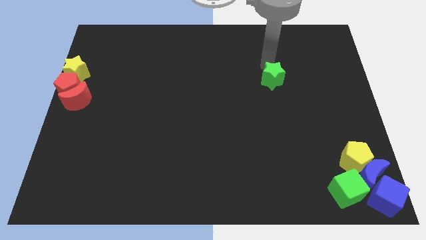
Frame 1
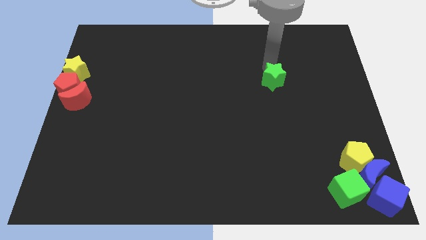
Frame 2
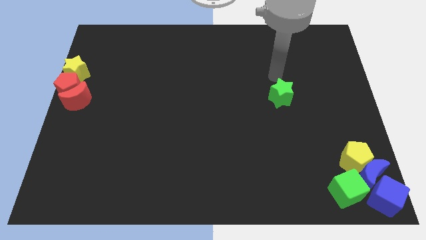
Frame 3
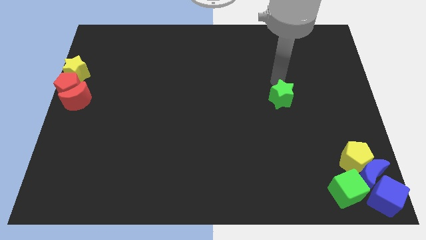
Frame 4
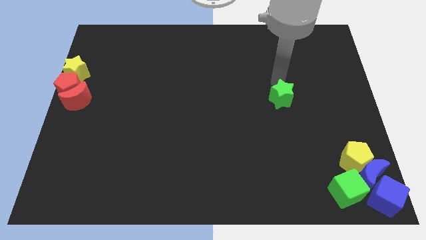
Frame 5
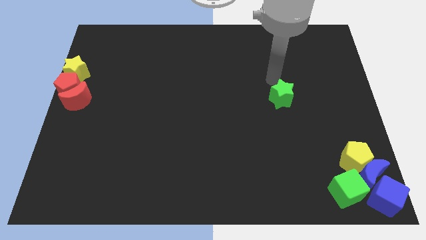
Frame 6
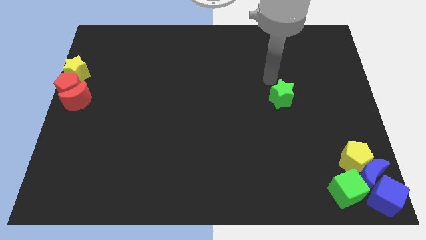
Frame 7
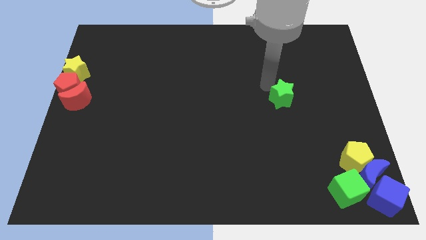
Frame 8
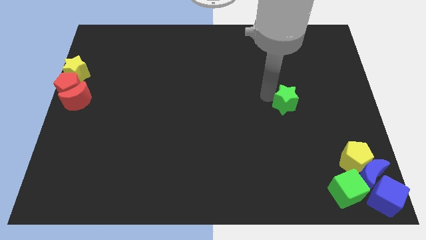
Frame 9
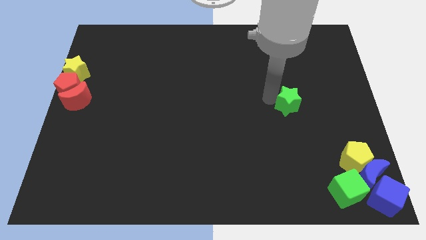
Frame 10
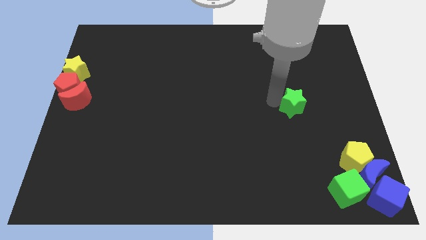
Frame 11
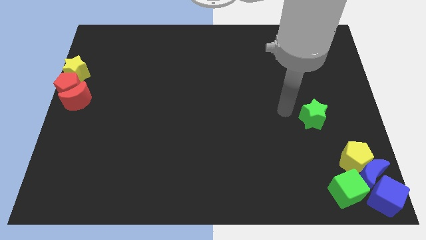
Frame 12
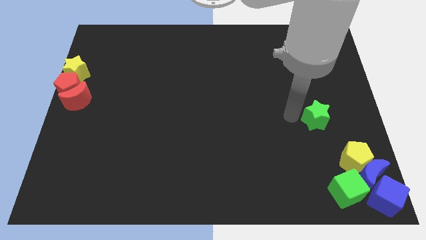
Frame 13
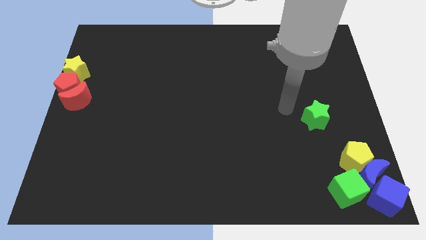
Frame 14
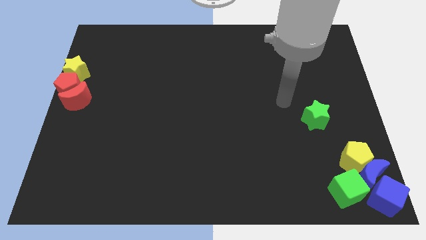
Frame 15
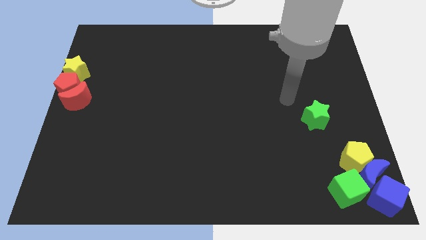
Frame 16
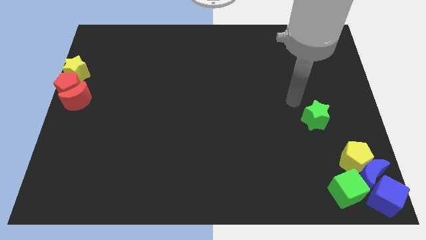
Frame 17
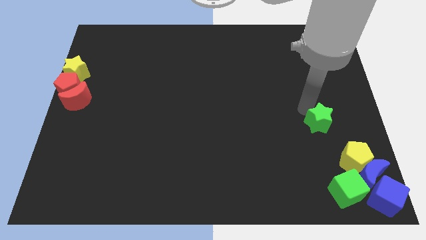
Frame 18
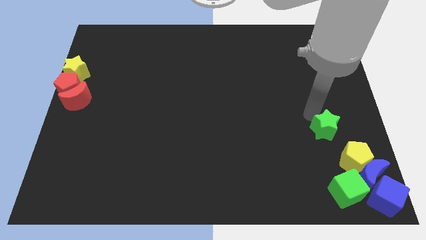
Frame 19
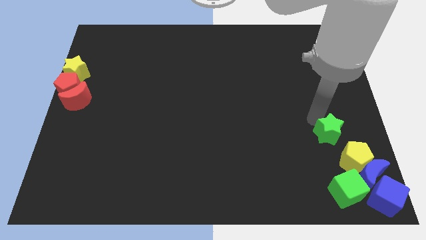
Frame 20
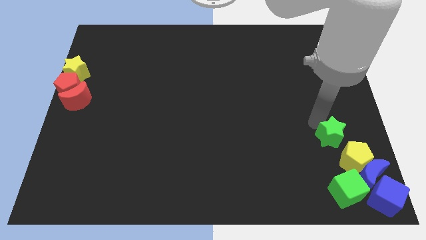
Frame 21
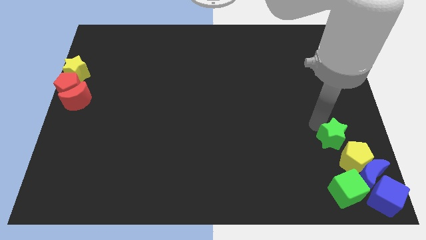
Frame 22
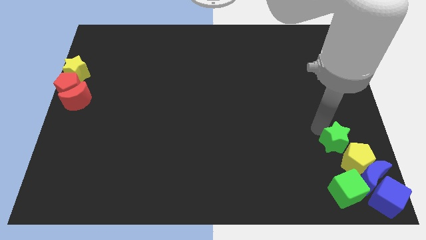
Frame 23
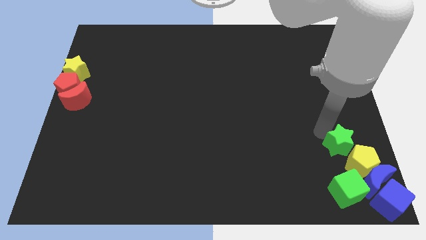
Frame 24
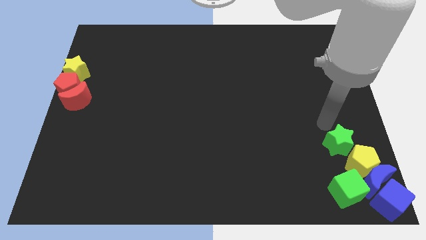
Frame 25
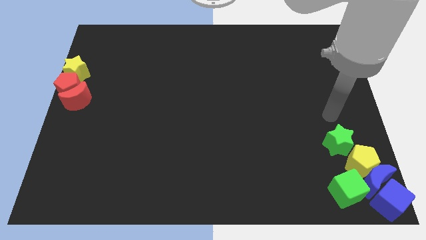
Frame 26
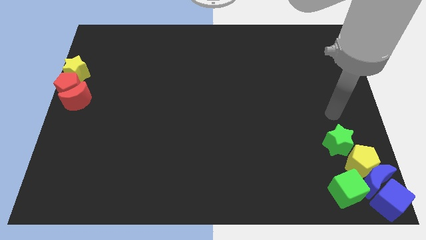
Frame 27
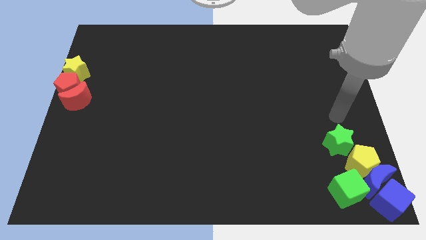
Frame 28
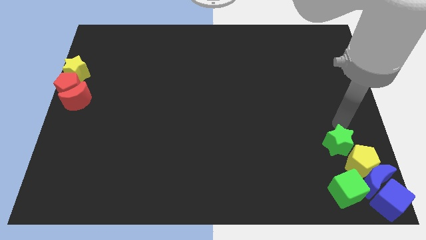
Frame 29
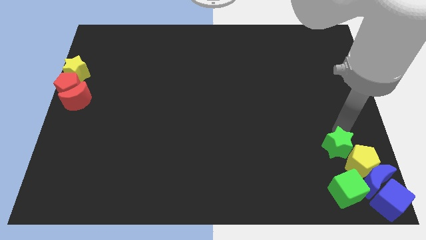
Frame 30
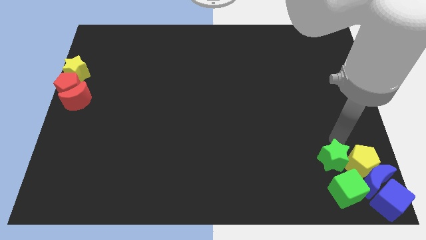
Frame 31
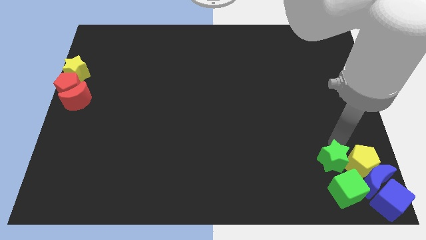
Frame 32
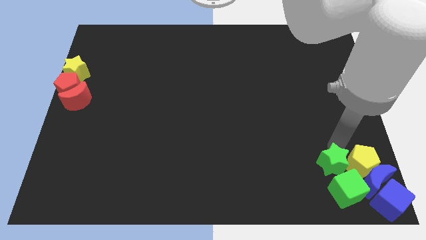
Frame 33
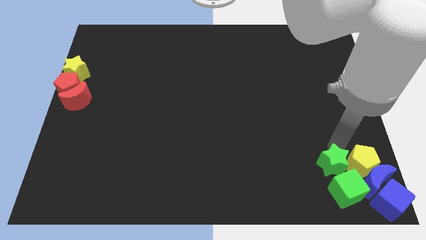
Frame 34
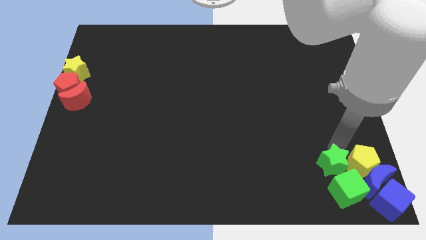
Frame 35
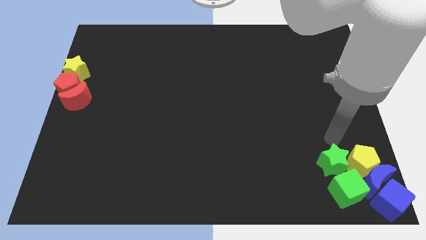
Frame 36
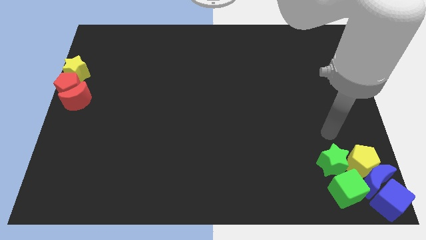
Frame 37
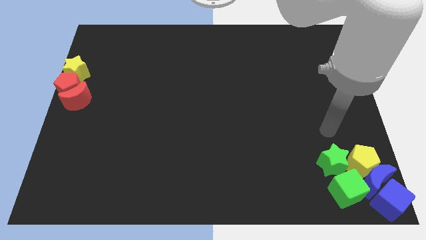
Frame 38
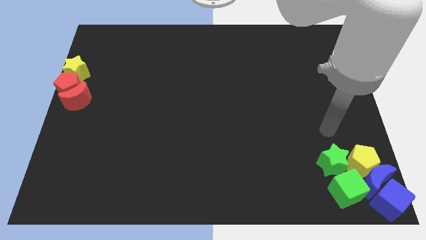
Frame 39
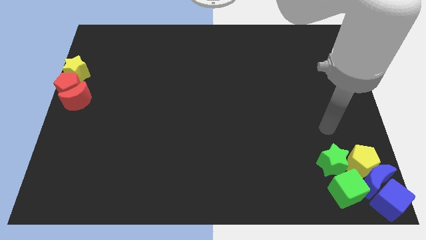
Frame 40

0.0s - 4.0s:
make a group of blocks at the bottom right corner of the board

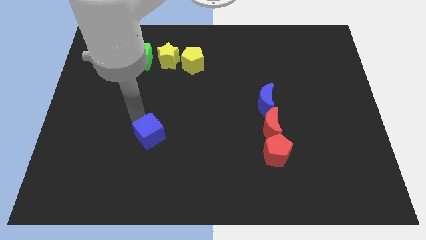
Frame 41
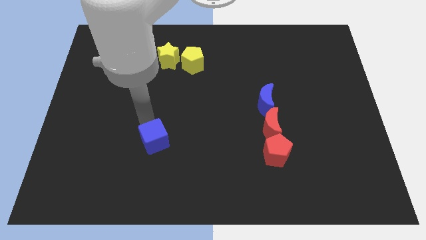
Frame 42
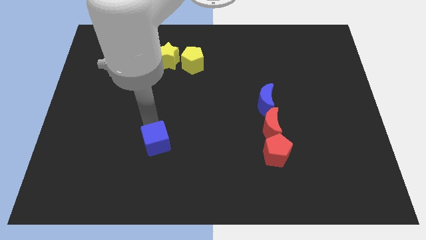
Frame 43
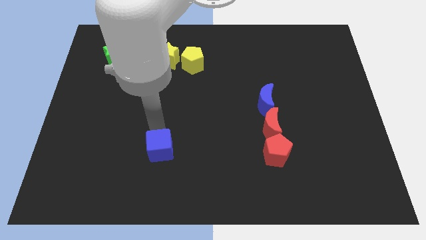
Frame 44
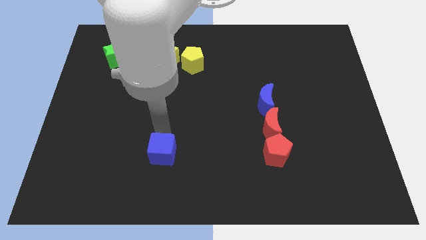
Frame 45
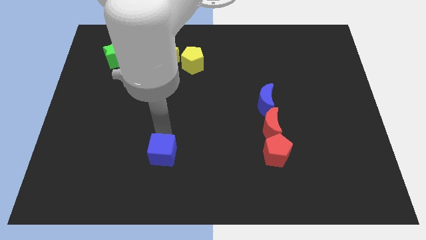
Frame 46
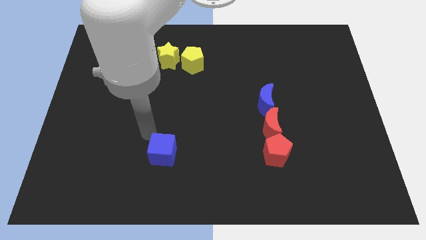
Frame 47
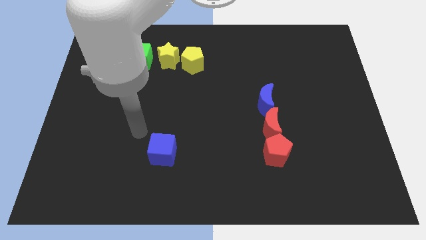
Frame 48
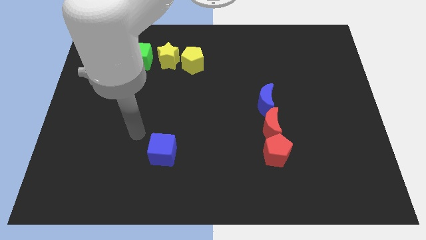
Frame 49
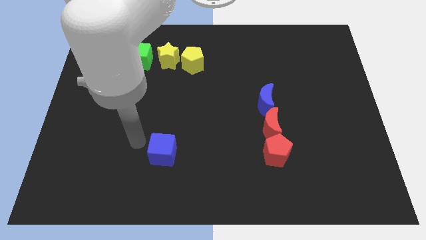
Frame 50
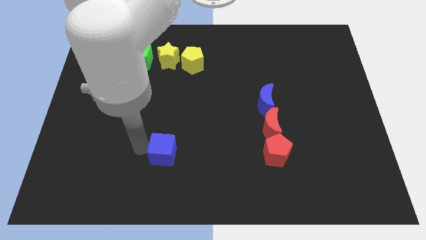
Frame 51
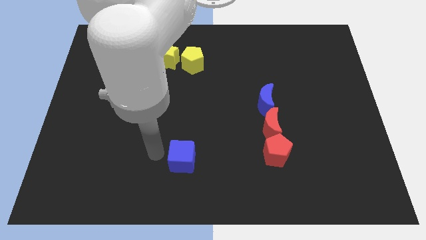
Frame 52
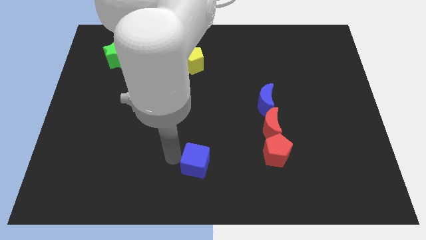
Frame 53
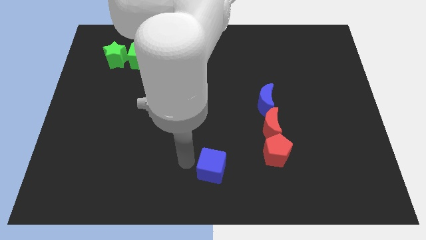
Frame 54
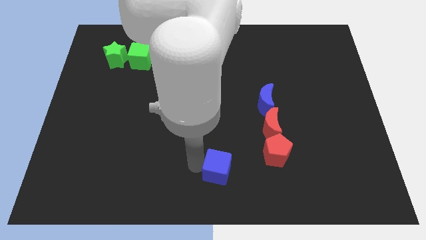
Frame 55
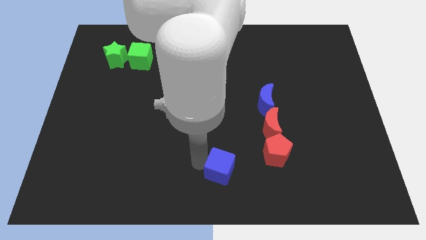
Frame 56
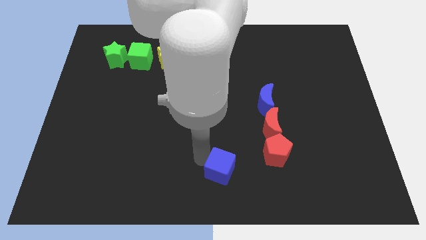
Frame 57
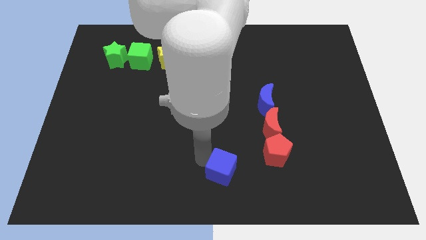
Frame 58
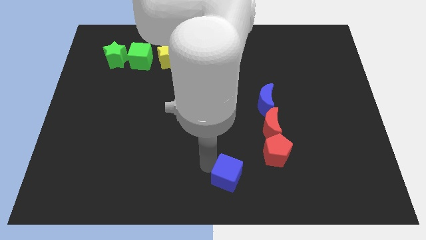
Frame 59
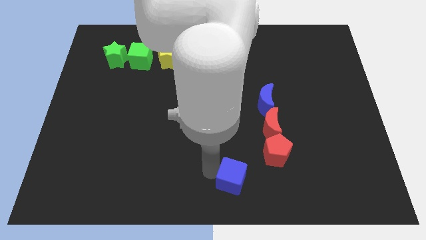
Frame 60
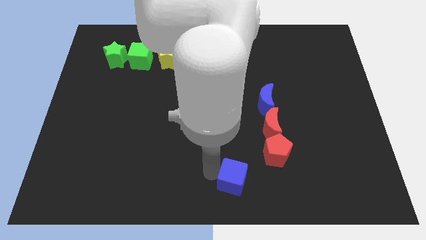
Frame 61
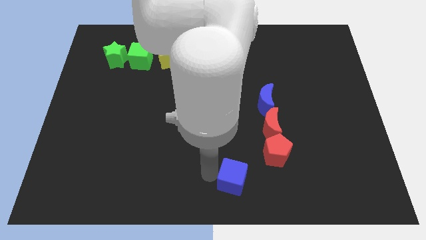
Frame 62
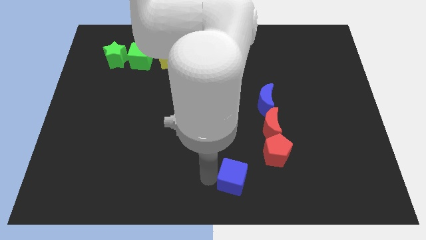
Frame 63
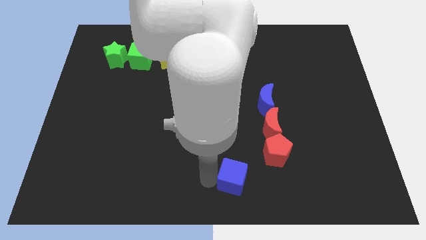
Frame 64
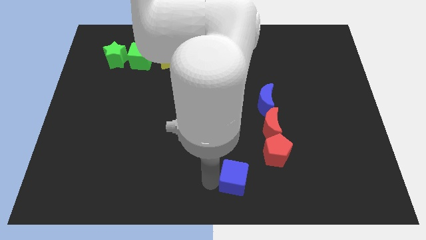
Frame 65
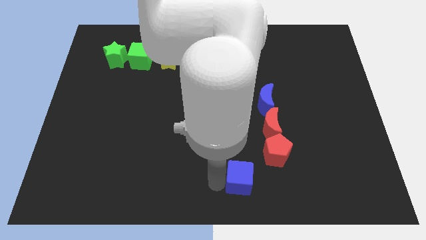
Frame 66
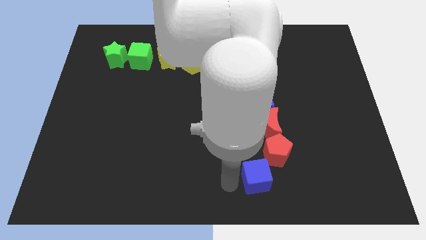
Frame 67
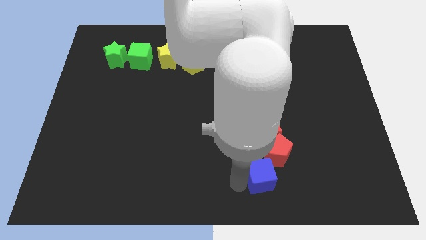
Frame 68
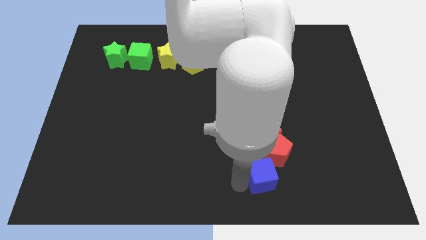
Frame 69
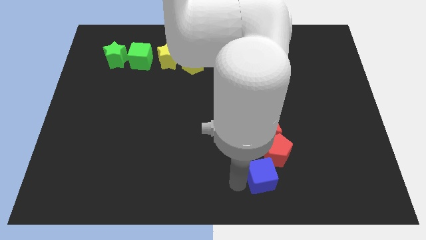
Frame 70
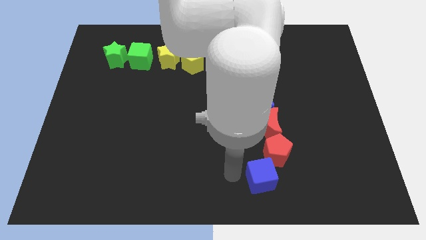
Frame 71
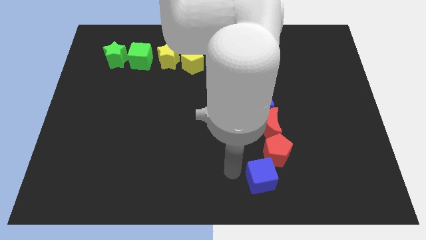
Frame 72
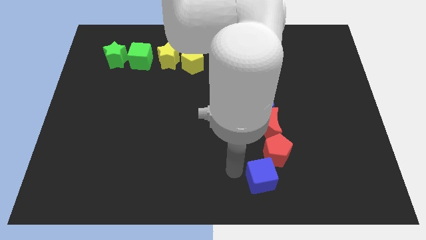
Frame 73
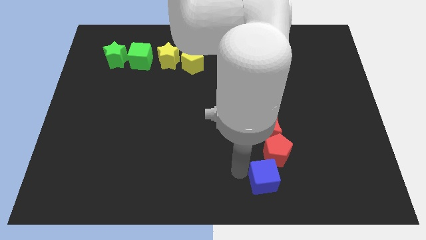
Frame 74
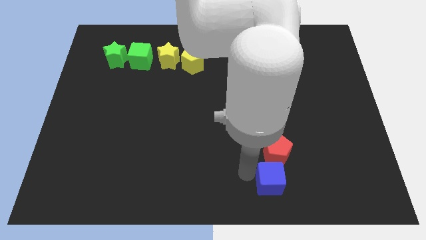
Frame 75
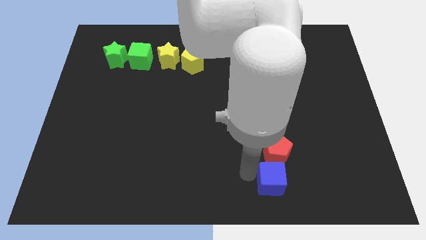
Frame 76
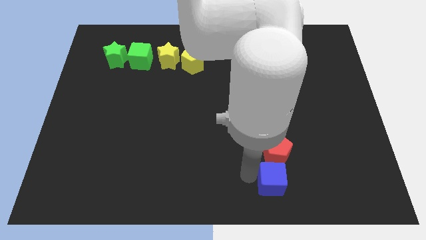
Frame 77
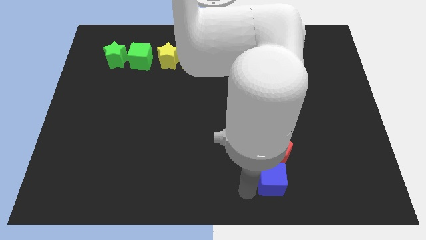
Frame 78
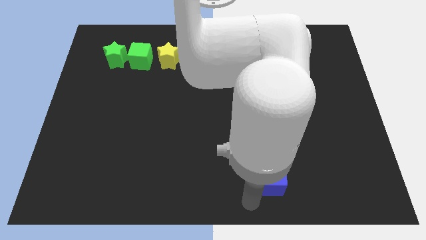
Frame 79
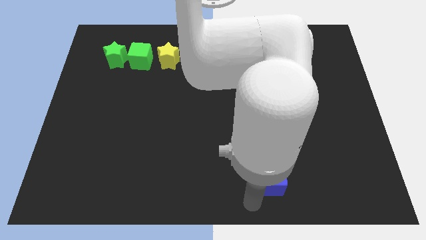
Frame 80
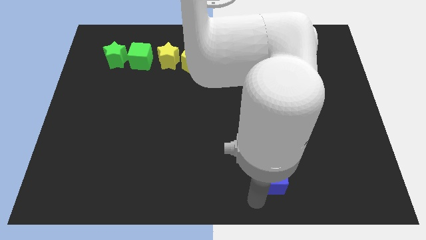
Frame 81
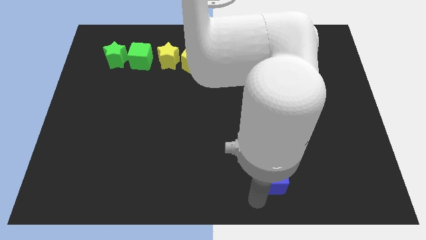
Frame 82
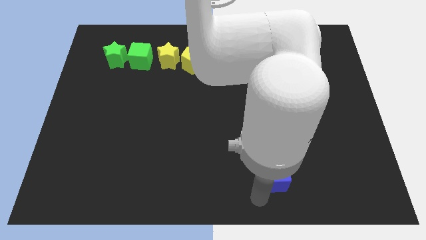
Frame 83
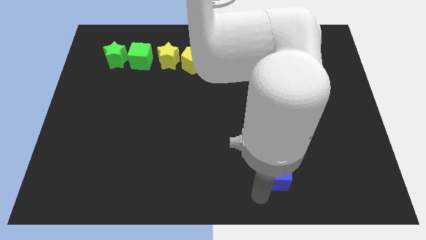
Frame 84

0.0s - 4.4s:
place the blue cube below the red pentagon

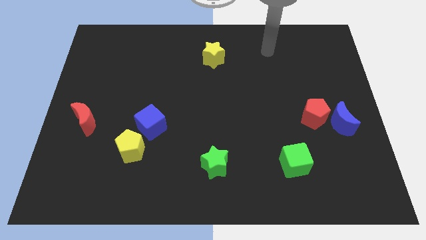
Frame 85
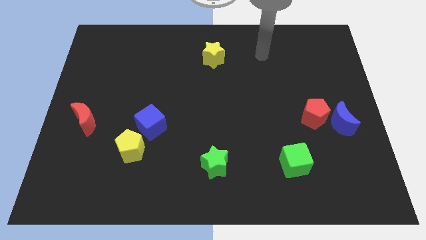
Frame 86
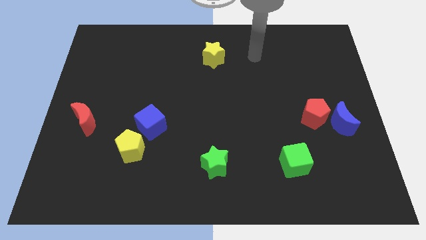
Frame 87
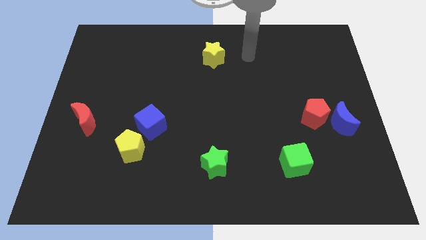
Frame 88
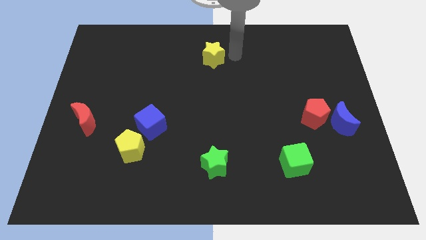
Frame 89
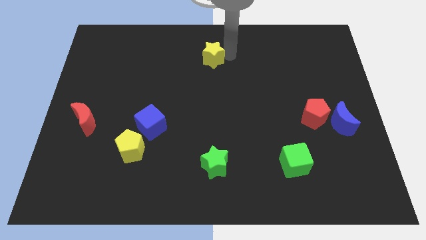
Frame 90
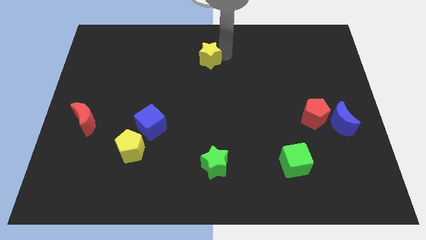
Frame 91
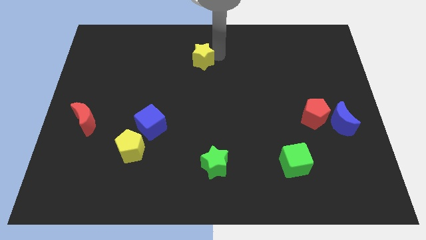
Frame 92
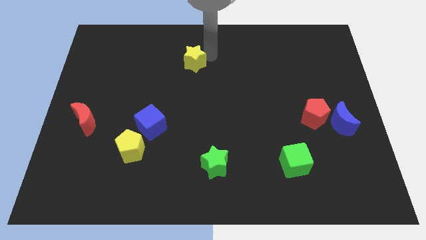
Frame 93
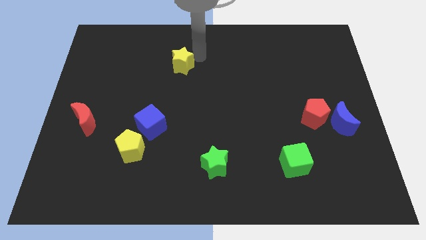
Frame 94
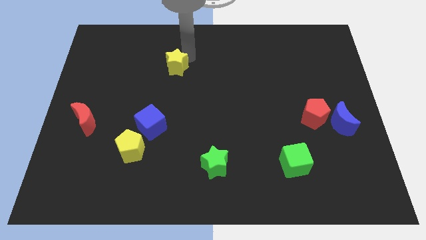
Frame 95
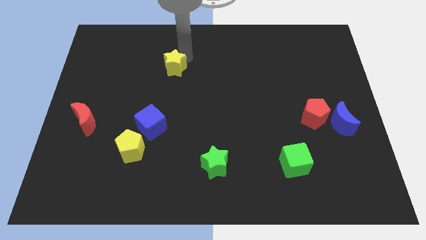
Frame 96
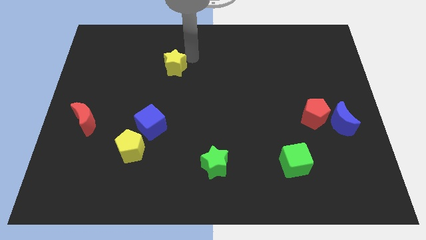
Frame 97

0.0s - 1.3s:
push the yellow star towards the left side of the board
